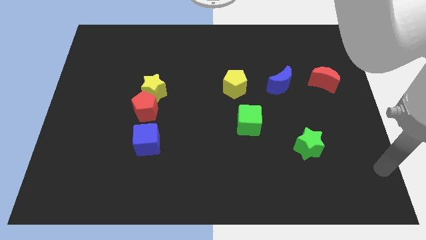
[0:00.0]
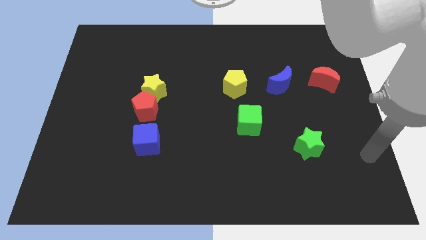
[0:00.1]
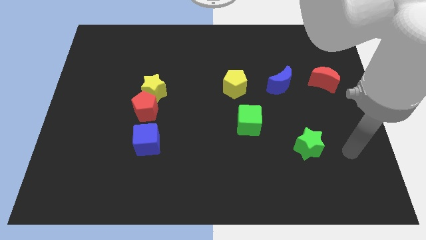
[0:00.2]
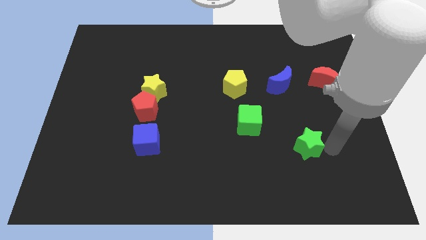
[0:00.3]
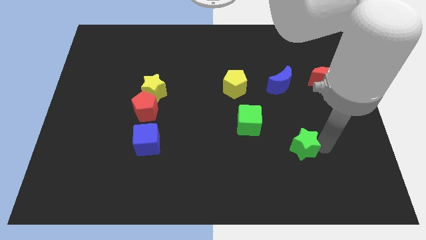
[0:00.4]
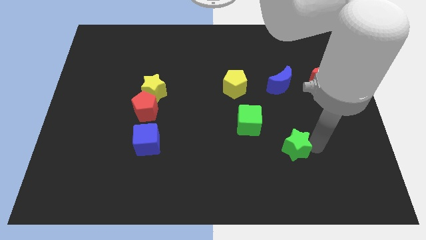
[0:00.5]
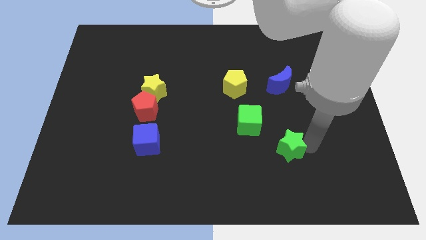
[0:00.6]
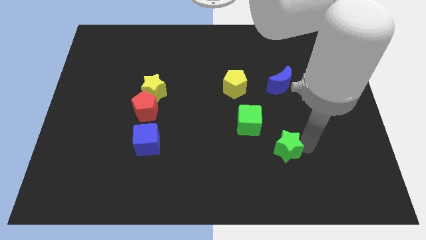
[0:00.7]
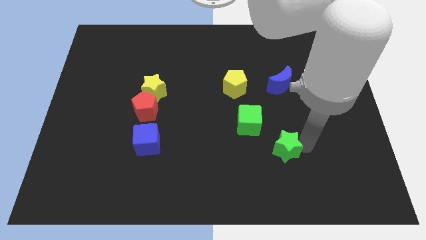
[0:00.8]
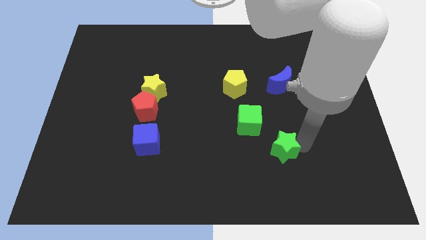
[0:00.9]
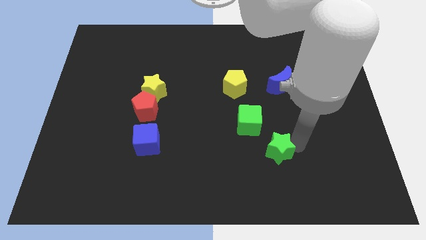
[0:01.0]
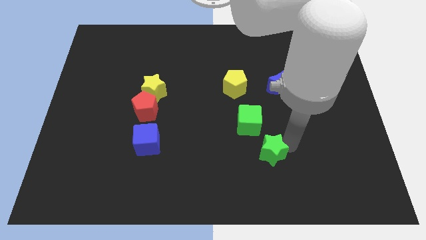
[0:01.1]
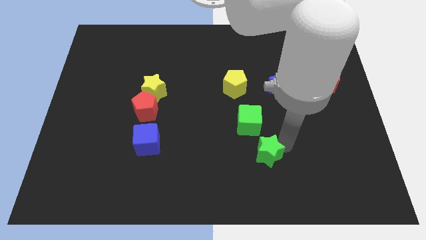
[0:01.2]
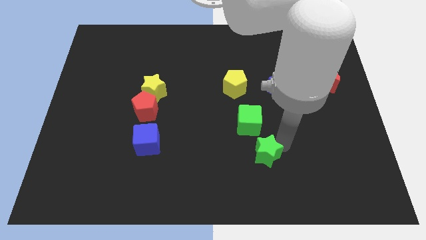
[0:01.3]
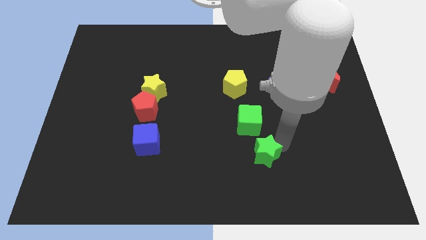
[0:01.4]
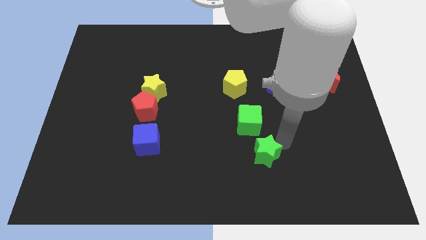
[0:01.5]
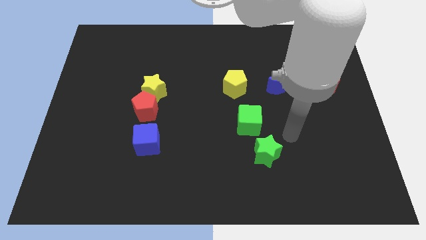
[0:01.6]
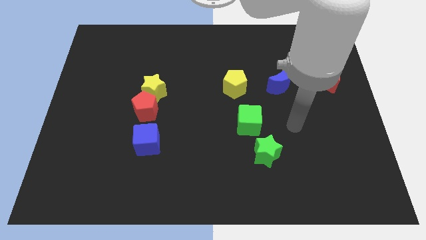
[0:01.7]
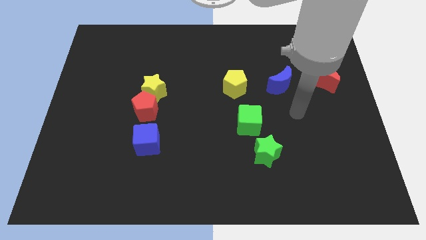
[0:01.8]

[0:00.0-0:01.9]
move the green star to the bottom right side of the green cube

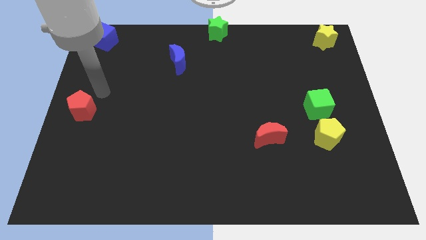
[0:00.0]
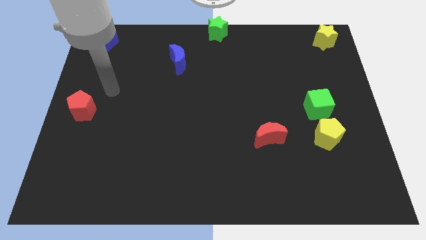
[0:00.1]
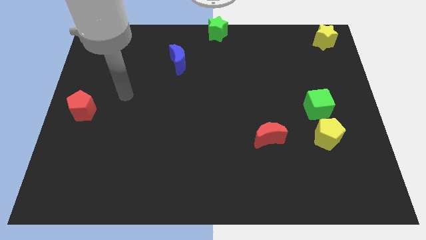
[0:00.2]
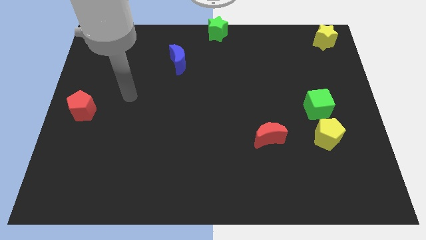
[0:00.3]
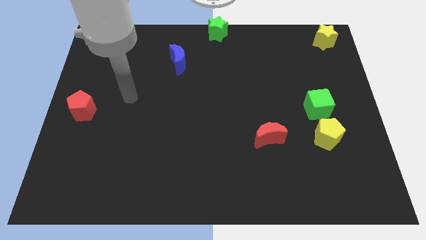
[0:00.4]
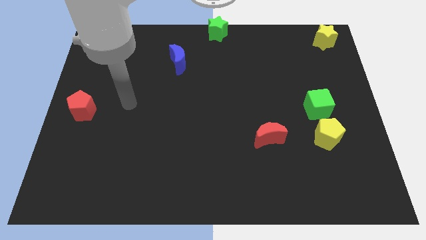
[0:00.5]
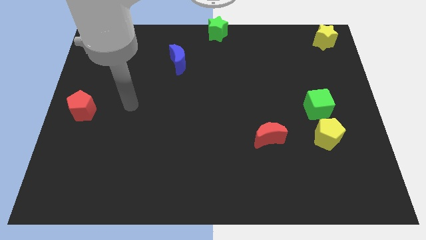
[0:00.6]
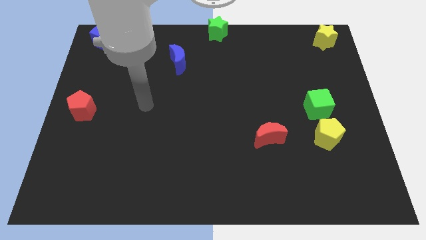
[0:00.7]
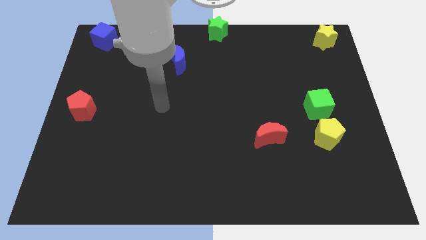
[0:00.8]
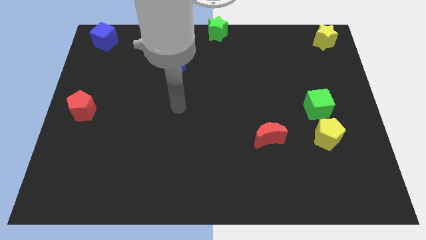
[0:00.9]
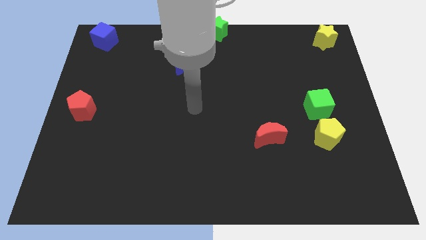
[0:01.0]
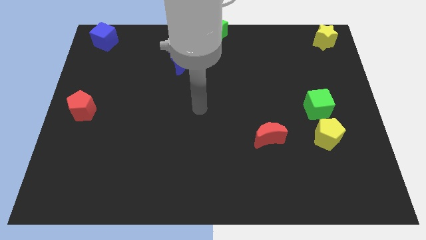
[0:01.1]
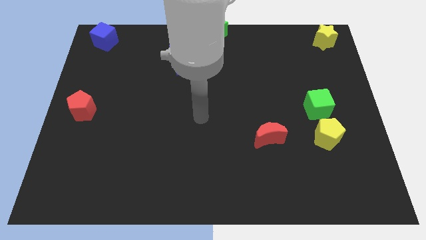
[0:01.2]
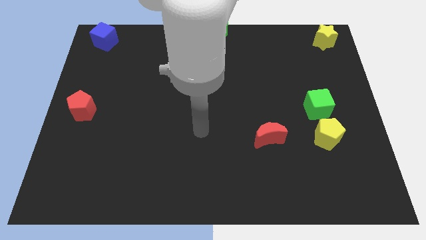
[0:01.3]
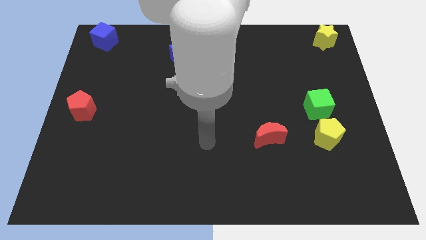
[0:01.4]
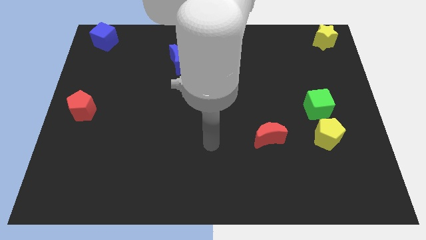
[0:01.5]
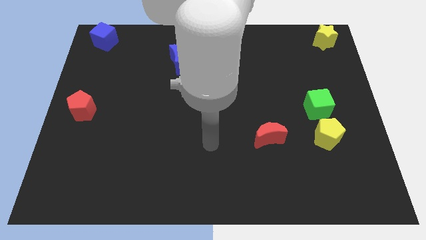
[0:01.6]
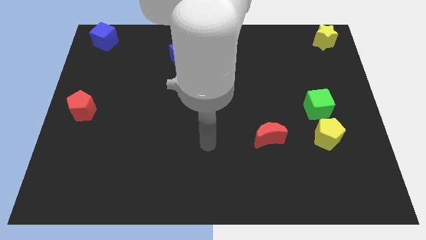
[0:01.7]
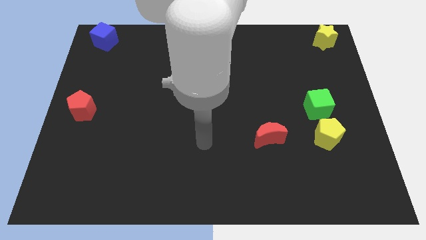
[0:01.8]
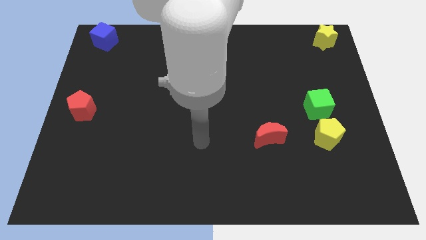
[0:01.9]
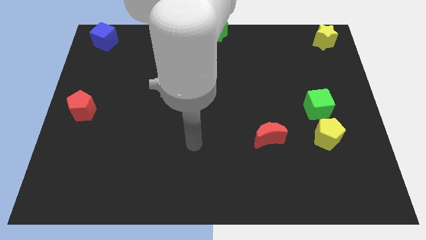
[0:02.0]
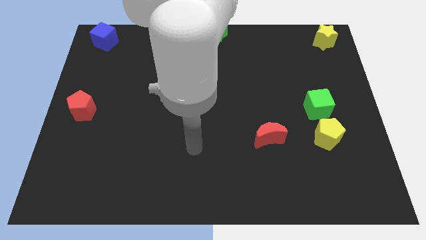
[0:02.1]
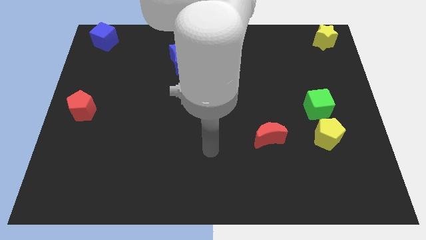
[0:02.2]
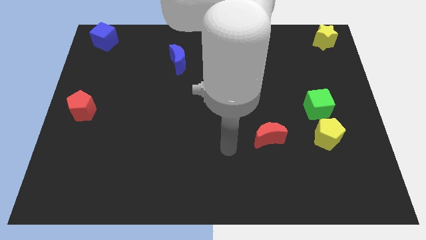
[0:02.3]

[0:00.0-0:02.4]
move your arm away from the red pentagon

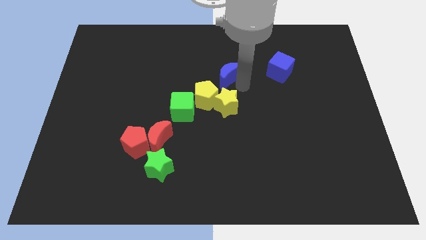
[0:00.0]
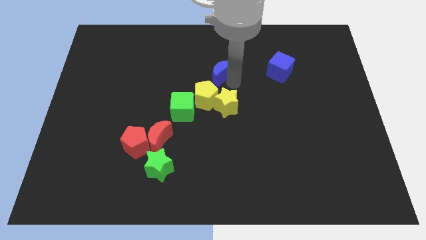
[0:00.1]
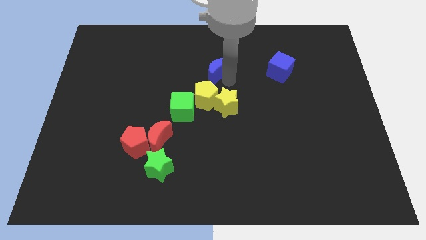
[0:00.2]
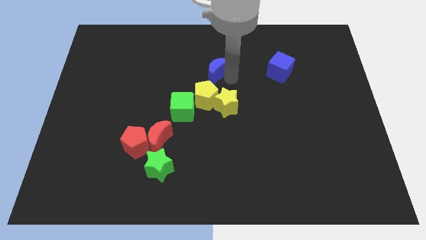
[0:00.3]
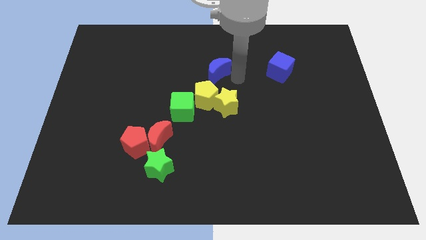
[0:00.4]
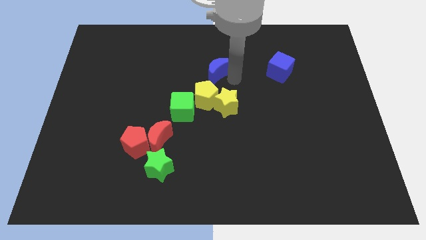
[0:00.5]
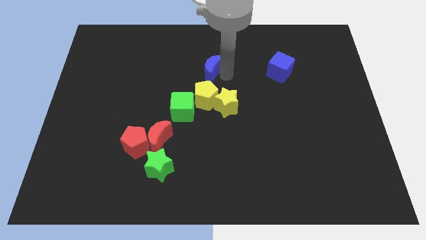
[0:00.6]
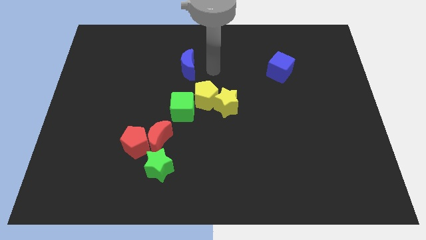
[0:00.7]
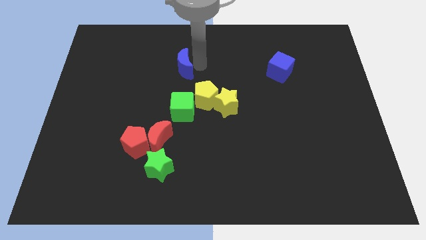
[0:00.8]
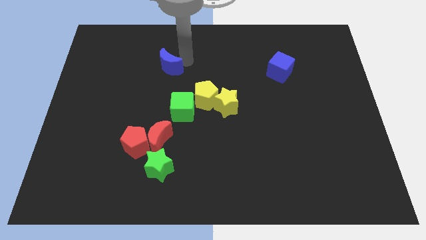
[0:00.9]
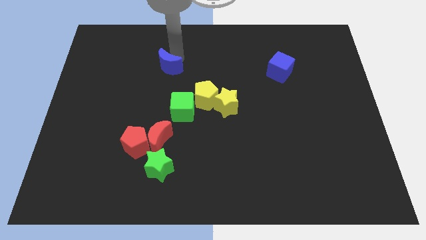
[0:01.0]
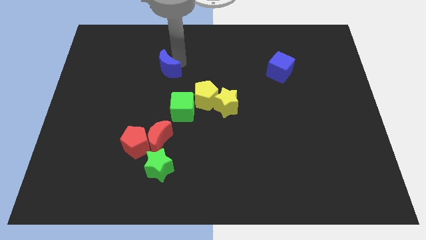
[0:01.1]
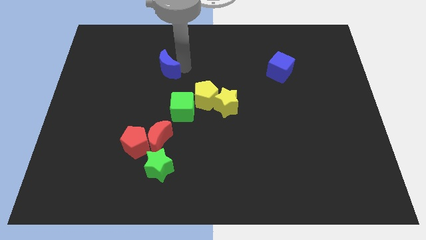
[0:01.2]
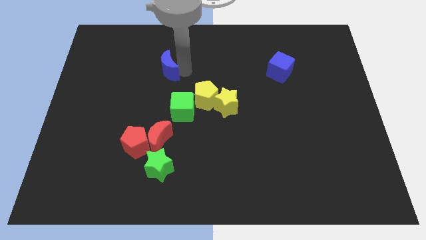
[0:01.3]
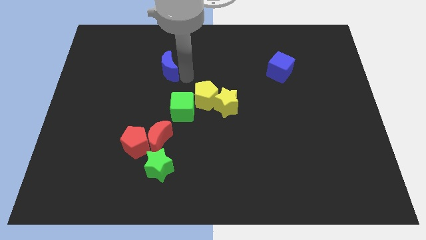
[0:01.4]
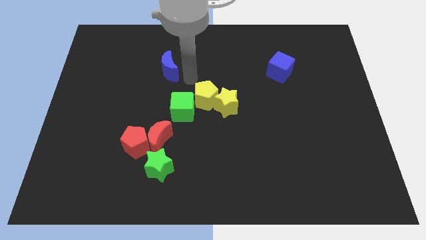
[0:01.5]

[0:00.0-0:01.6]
push the blue crescent to the top of the green cube

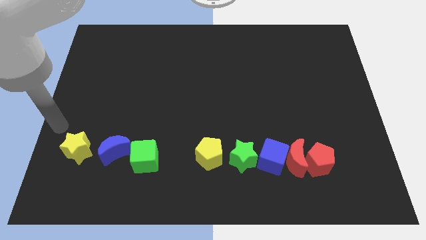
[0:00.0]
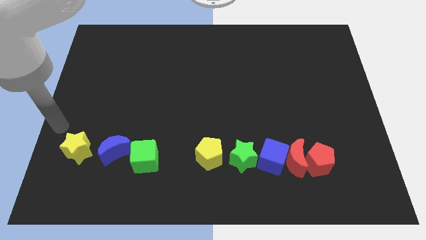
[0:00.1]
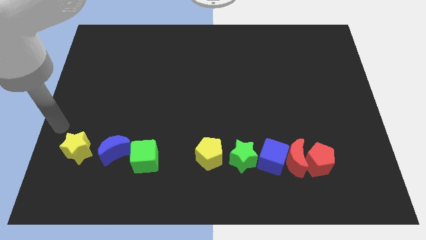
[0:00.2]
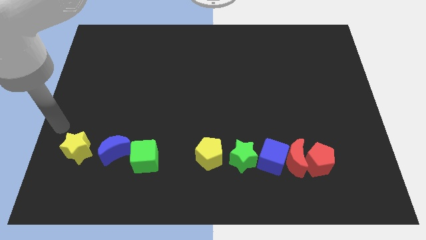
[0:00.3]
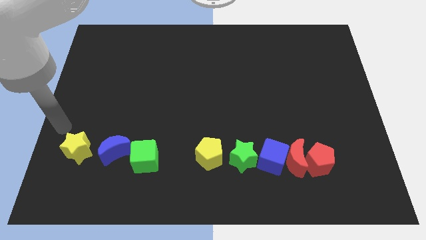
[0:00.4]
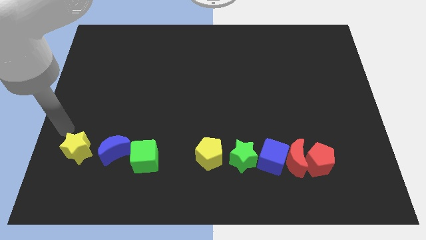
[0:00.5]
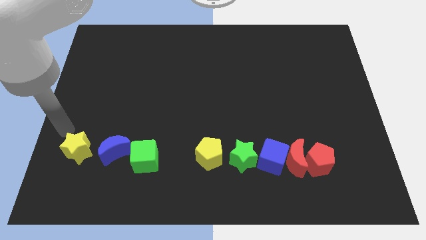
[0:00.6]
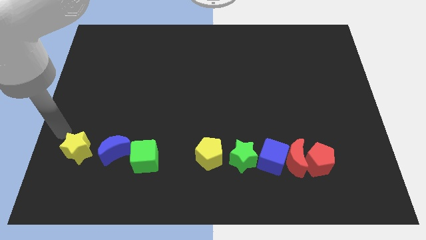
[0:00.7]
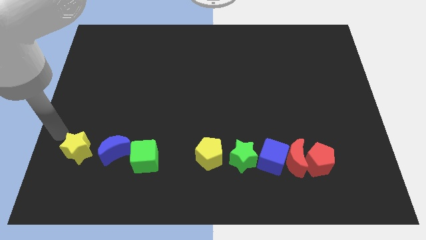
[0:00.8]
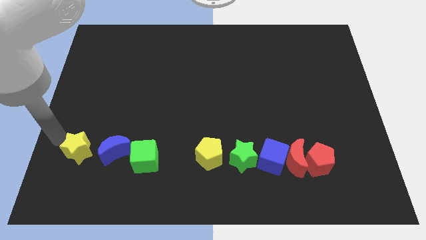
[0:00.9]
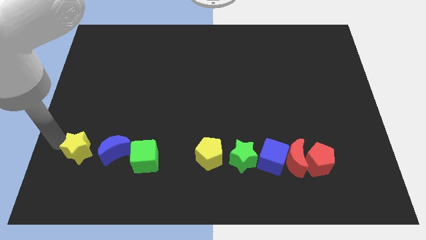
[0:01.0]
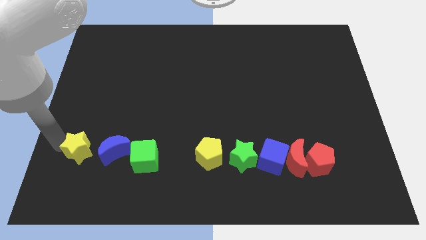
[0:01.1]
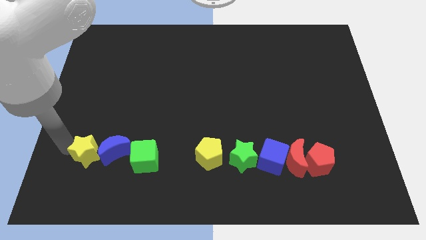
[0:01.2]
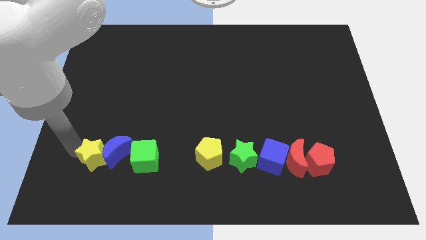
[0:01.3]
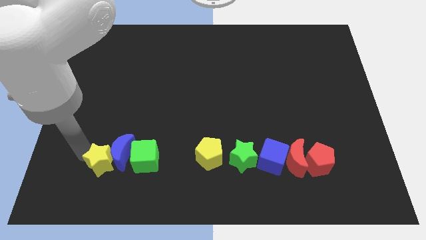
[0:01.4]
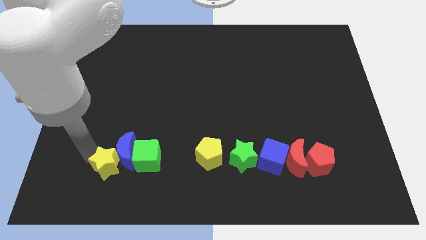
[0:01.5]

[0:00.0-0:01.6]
move the yellow star into the blue moon

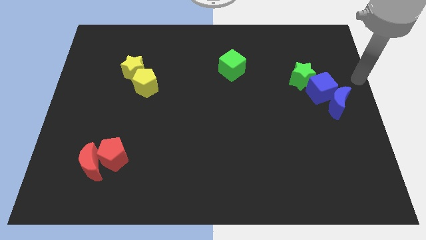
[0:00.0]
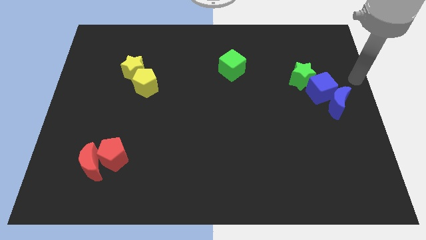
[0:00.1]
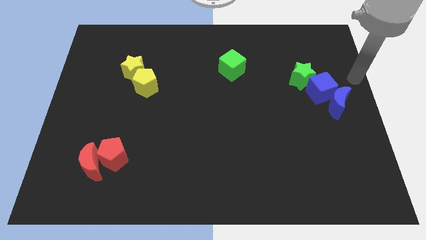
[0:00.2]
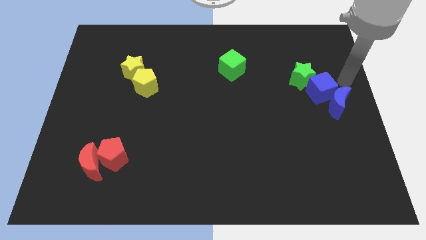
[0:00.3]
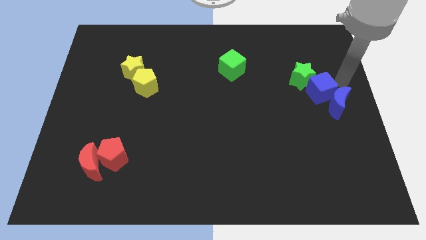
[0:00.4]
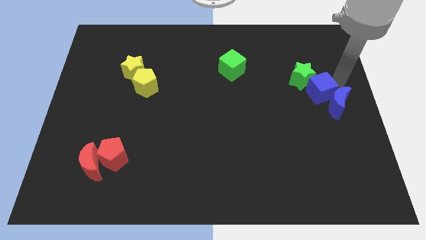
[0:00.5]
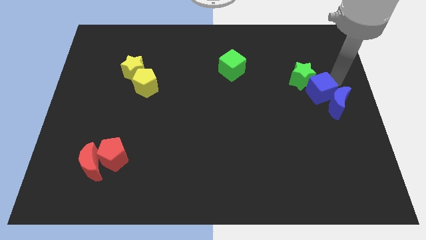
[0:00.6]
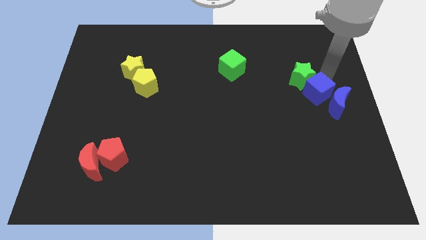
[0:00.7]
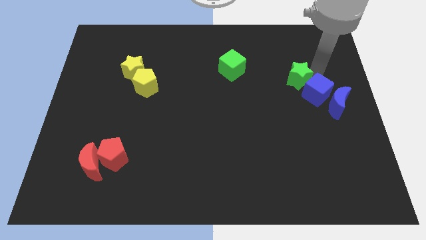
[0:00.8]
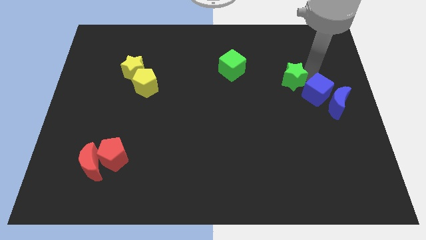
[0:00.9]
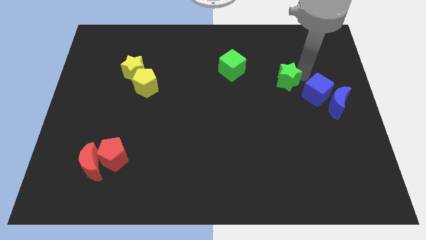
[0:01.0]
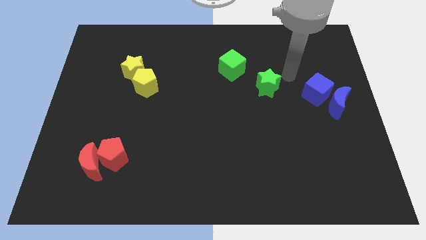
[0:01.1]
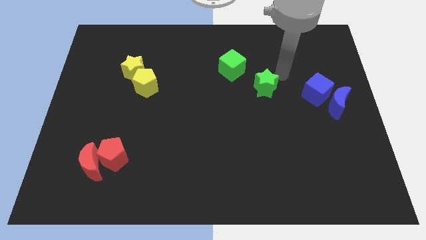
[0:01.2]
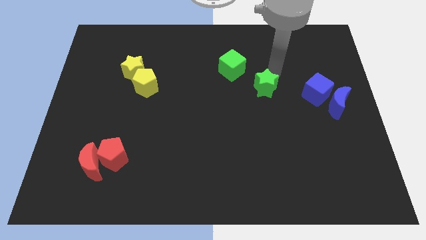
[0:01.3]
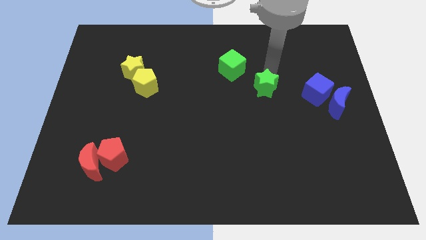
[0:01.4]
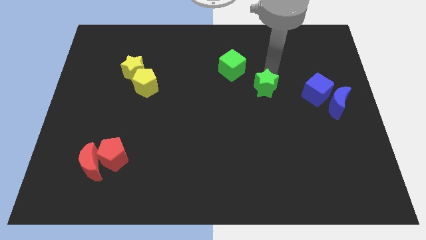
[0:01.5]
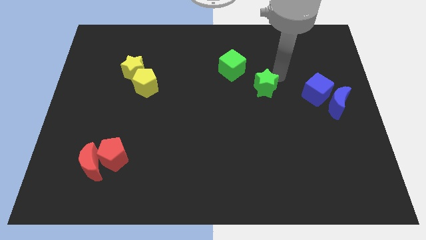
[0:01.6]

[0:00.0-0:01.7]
push the green star diagonally on the bottom right side of the green cube
